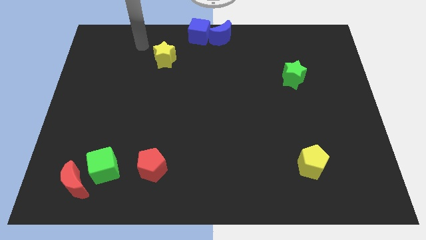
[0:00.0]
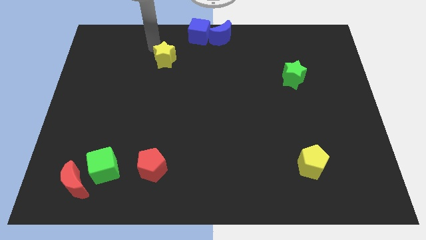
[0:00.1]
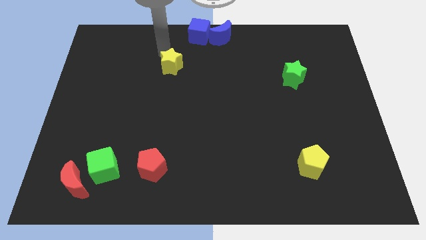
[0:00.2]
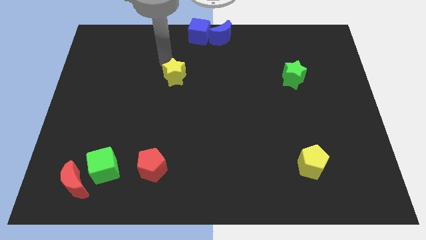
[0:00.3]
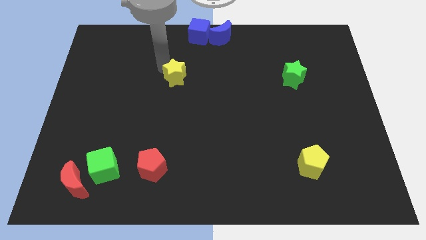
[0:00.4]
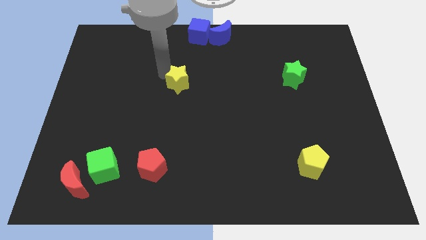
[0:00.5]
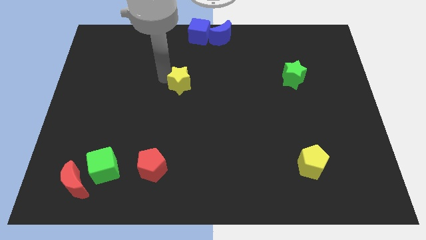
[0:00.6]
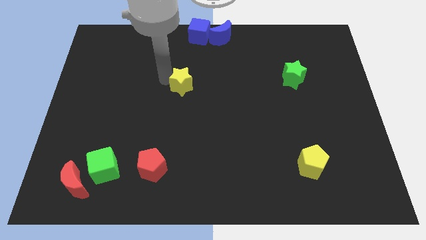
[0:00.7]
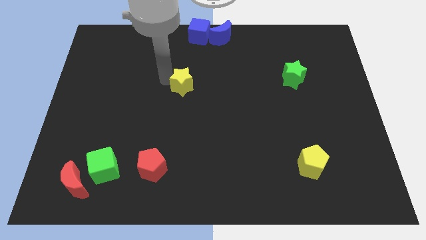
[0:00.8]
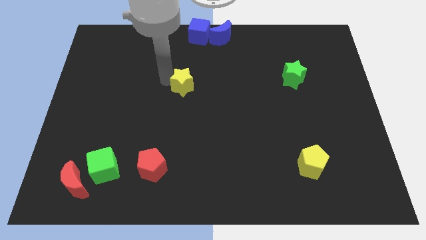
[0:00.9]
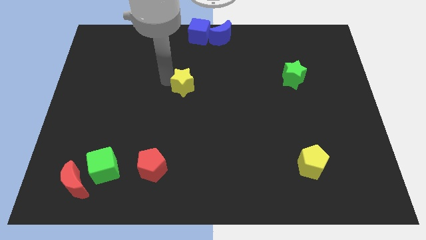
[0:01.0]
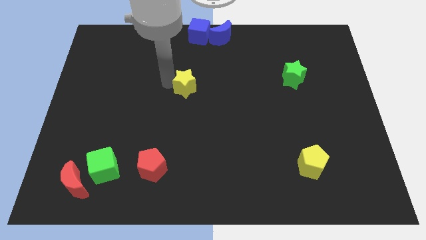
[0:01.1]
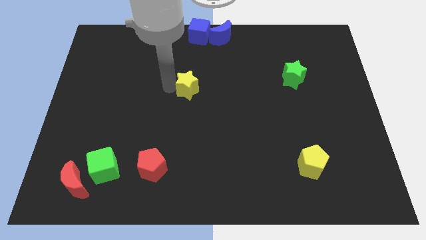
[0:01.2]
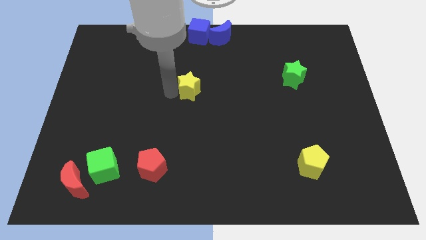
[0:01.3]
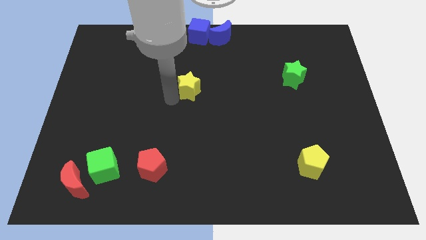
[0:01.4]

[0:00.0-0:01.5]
move the yellow star to the center

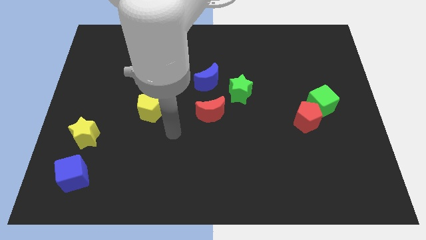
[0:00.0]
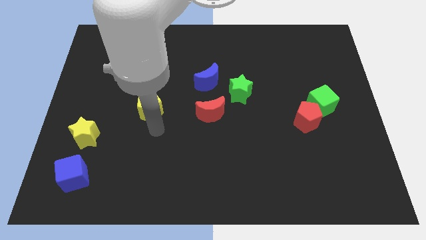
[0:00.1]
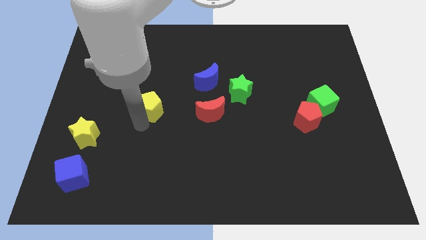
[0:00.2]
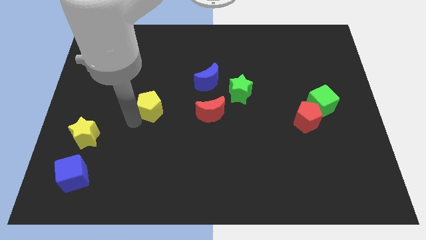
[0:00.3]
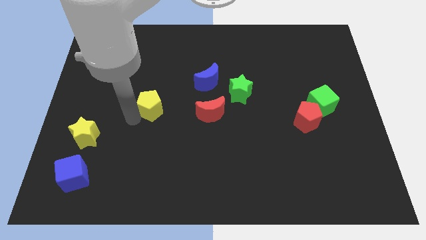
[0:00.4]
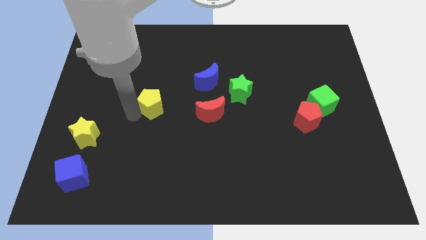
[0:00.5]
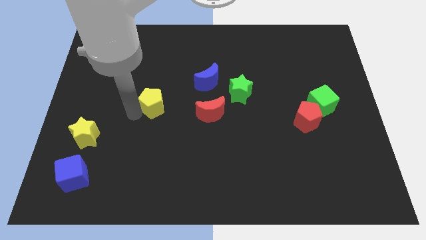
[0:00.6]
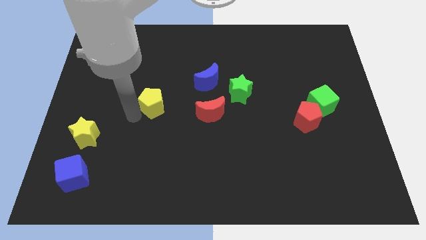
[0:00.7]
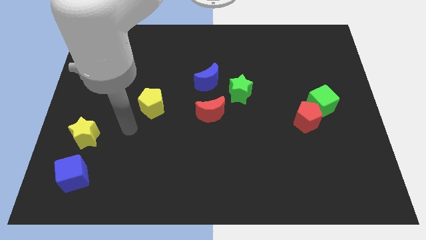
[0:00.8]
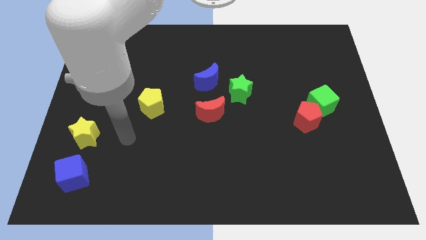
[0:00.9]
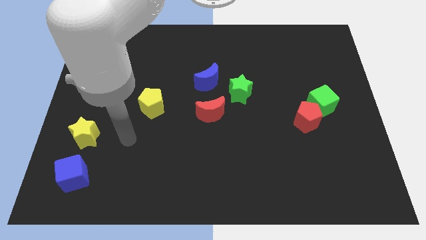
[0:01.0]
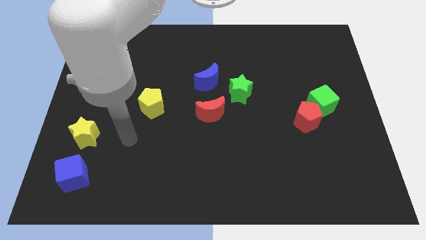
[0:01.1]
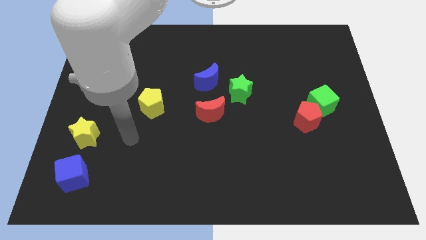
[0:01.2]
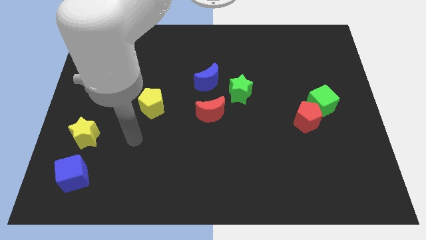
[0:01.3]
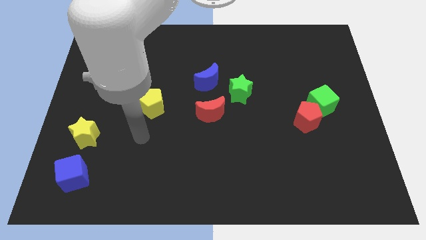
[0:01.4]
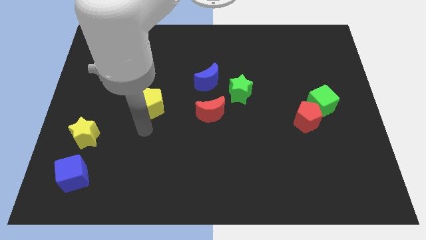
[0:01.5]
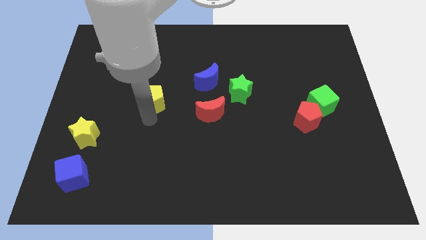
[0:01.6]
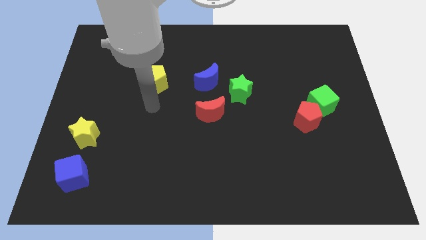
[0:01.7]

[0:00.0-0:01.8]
place the yellow pentagon left to the blue moon

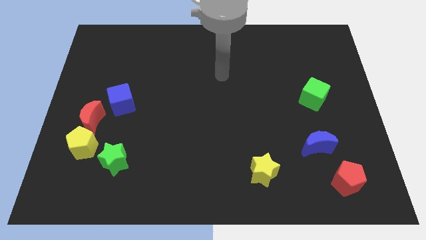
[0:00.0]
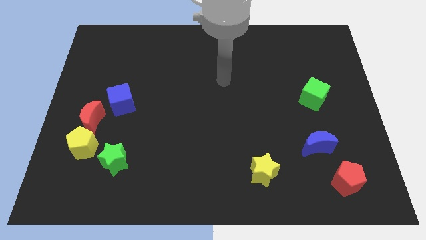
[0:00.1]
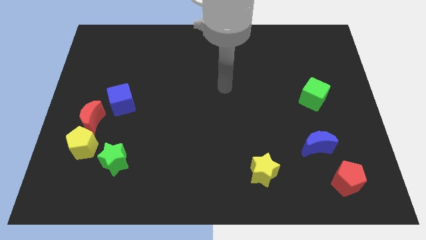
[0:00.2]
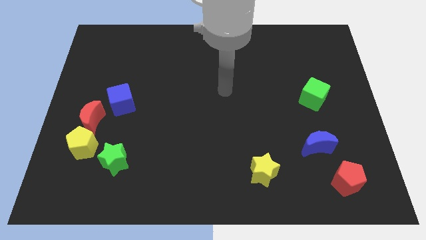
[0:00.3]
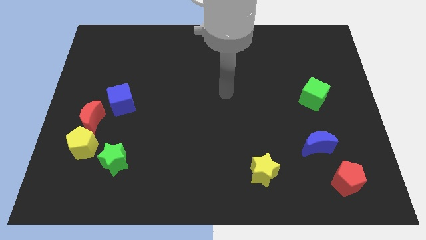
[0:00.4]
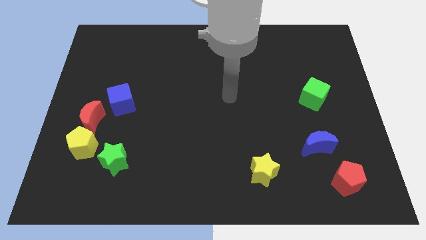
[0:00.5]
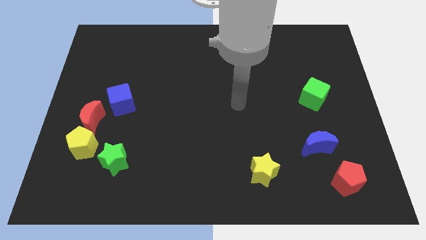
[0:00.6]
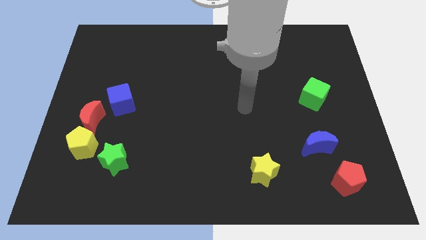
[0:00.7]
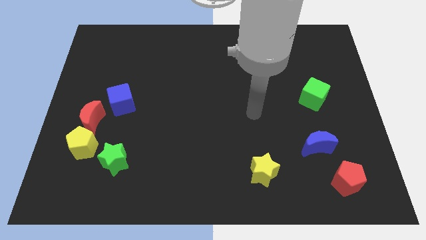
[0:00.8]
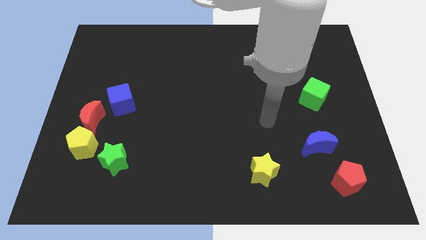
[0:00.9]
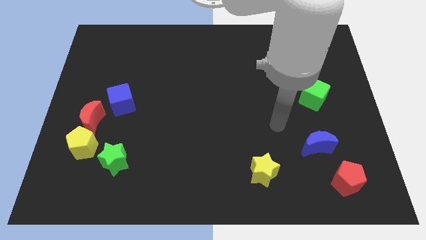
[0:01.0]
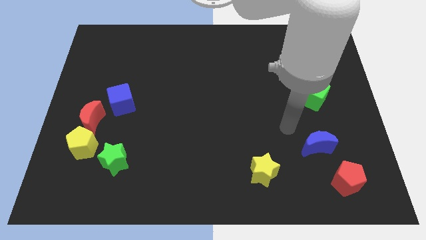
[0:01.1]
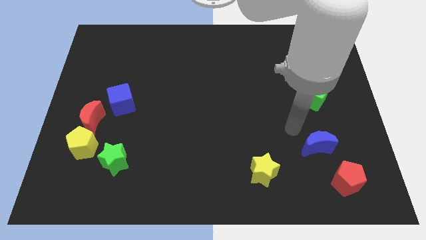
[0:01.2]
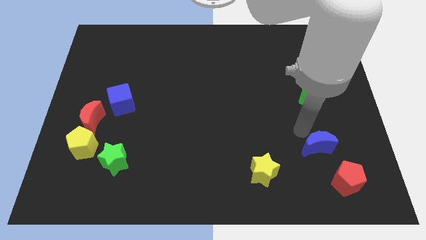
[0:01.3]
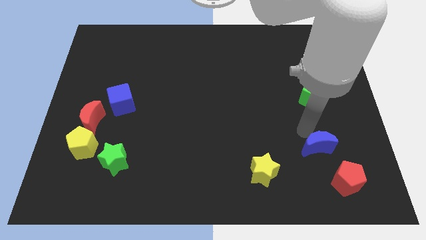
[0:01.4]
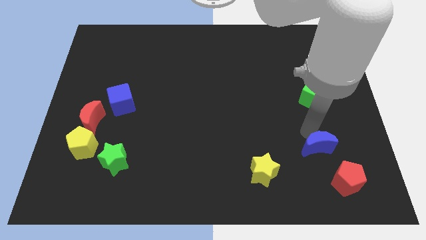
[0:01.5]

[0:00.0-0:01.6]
move the arm towards the blue crescent

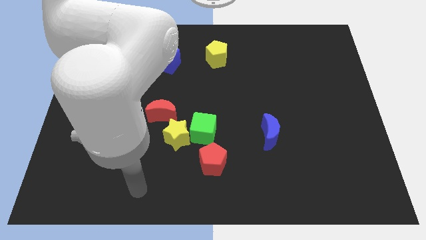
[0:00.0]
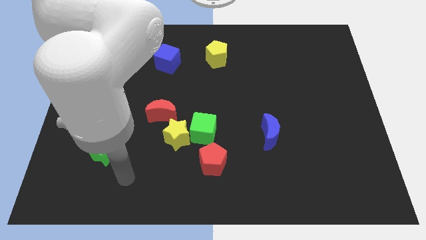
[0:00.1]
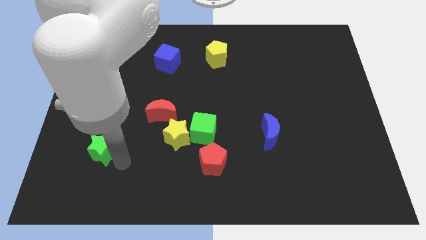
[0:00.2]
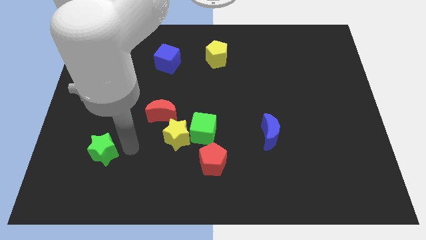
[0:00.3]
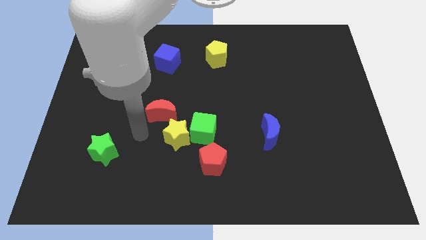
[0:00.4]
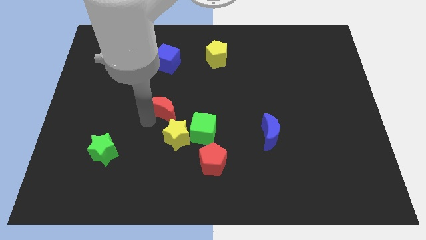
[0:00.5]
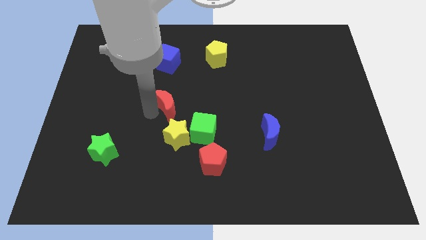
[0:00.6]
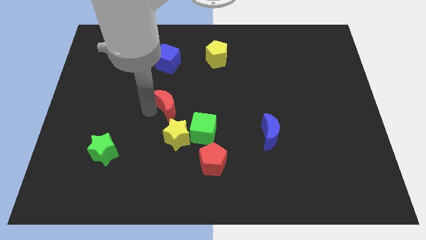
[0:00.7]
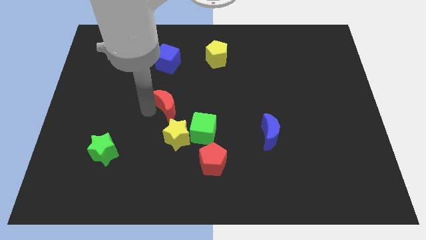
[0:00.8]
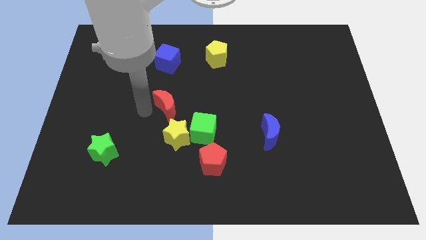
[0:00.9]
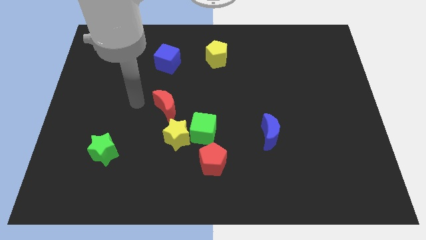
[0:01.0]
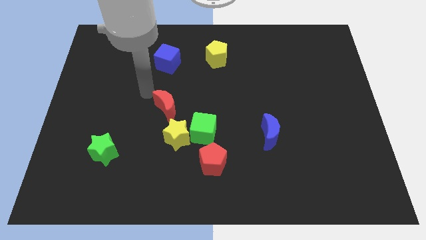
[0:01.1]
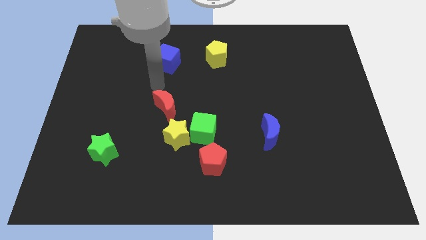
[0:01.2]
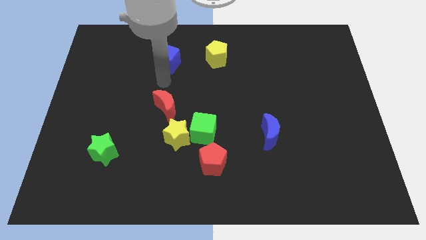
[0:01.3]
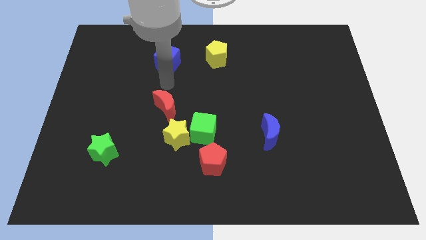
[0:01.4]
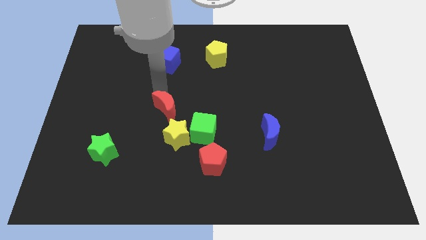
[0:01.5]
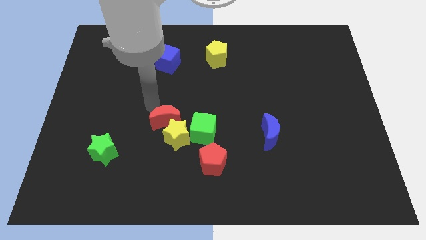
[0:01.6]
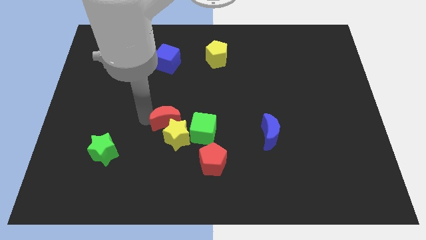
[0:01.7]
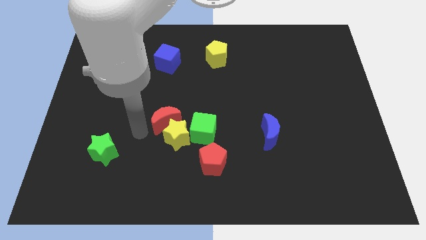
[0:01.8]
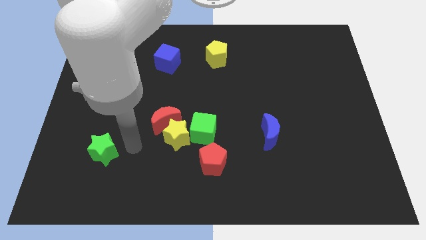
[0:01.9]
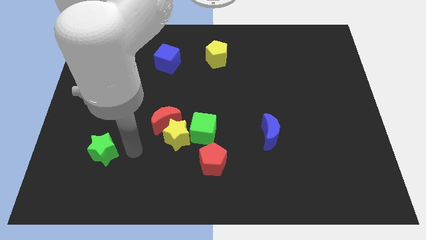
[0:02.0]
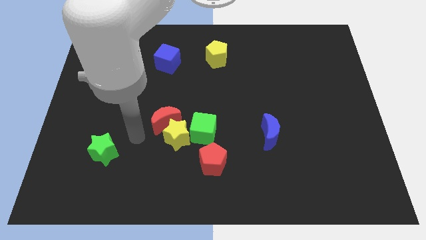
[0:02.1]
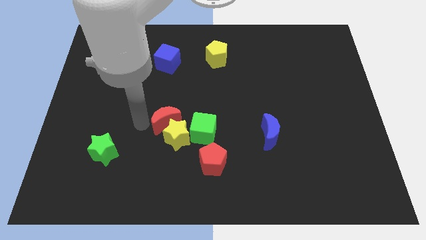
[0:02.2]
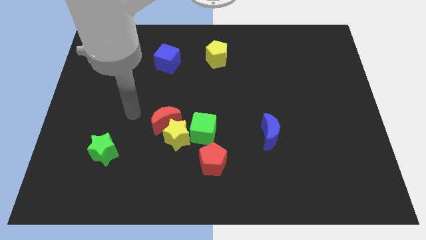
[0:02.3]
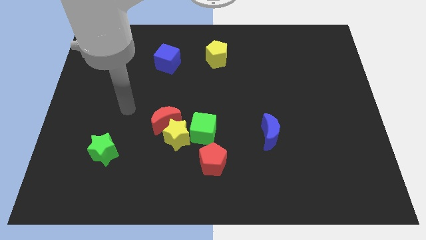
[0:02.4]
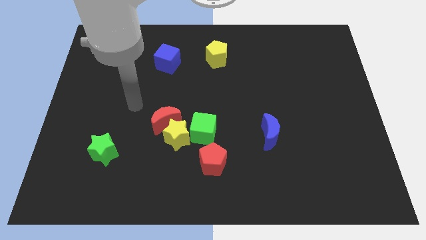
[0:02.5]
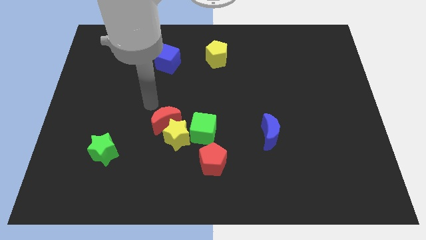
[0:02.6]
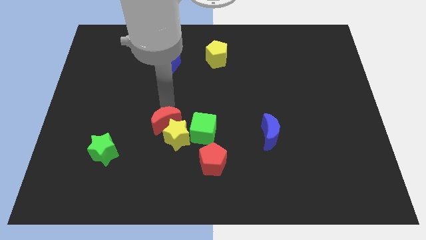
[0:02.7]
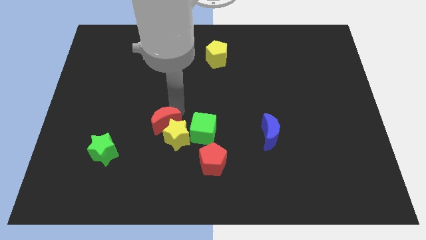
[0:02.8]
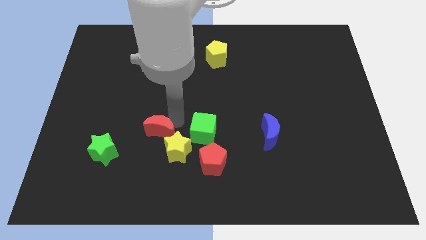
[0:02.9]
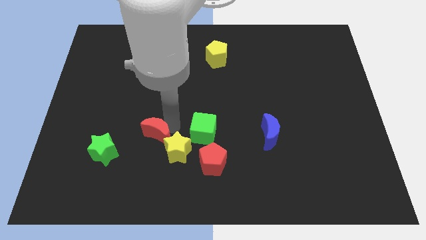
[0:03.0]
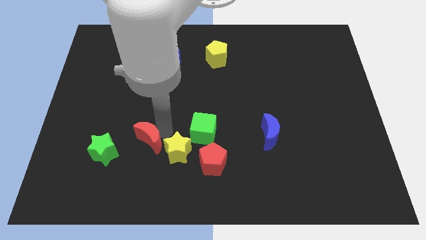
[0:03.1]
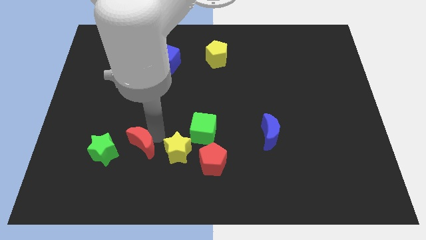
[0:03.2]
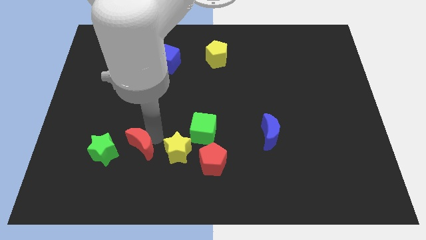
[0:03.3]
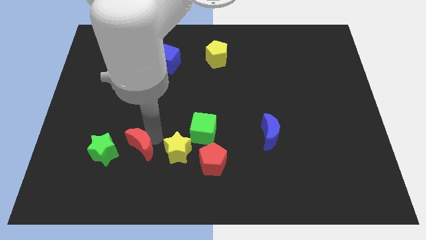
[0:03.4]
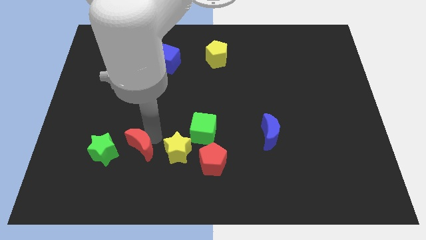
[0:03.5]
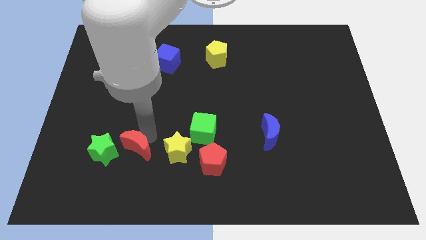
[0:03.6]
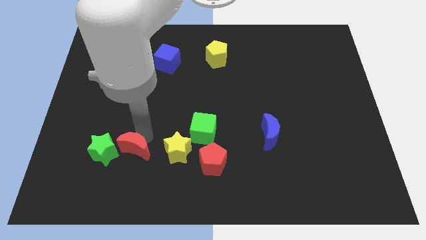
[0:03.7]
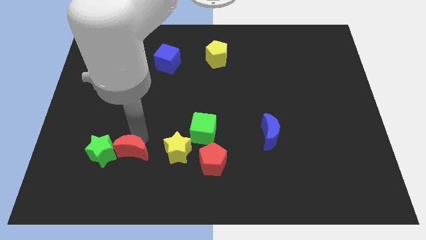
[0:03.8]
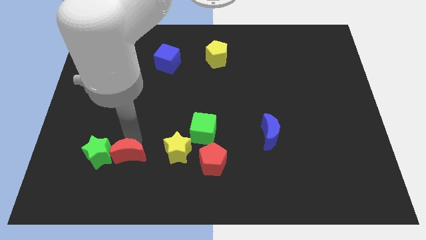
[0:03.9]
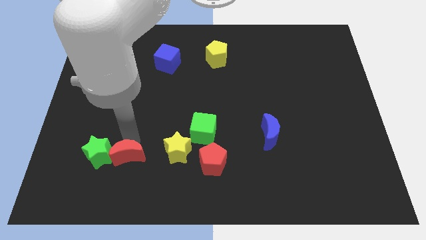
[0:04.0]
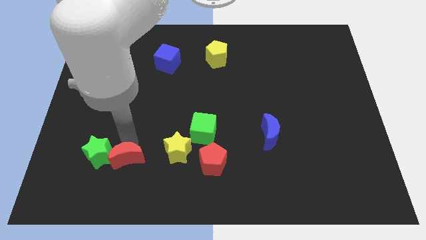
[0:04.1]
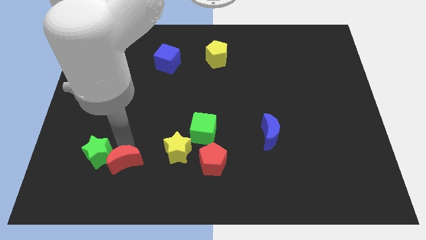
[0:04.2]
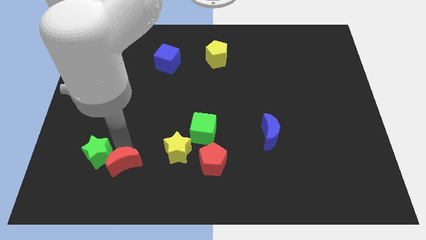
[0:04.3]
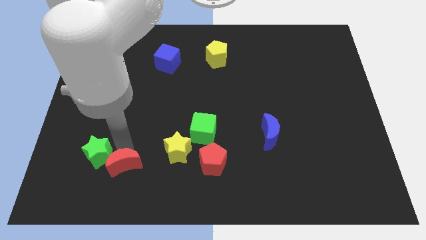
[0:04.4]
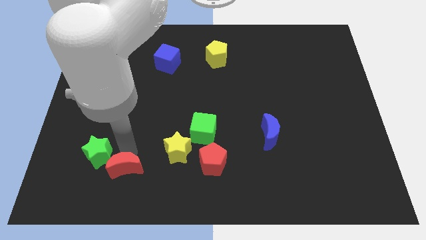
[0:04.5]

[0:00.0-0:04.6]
move the red moon digaonally bottom right to green star
